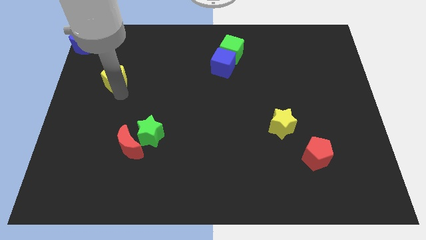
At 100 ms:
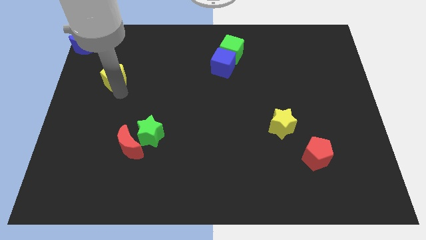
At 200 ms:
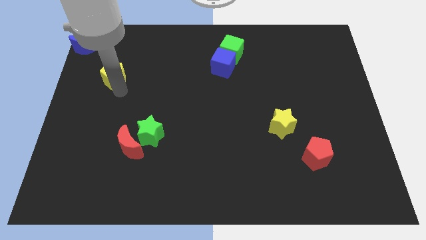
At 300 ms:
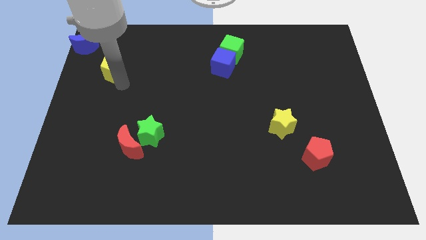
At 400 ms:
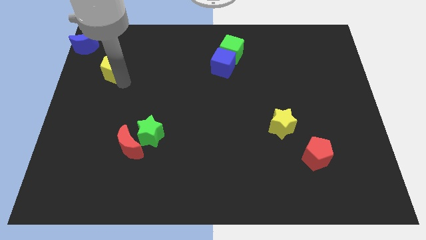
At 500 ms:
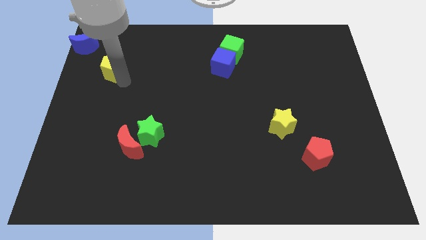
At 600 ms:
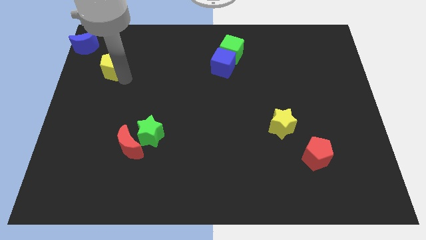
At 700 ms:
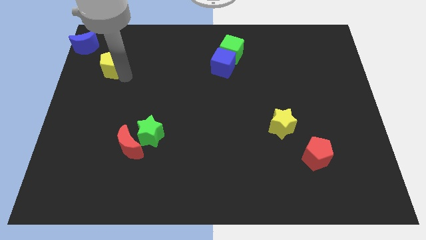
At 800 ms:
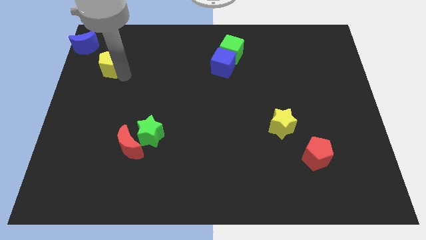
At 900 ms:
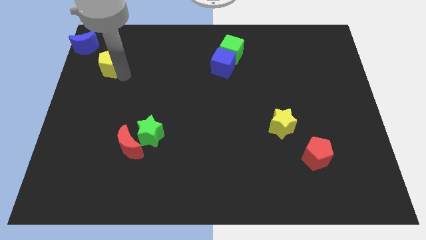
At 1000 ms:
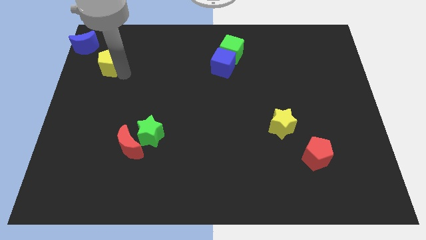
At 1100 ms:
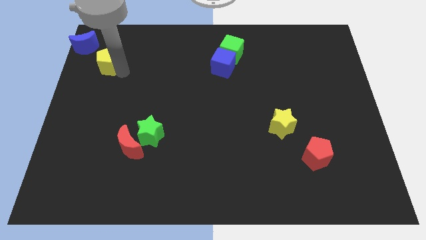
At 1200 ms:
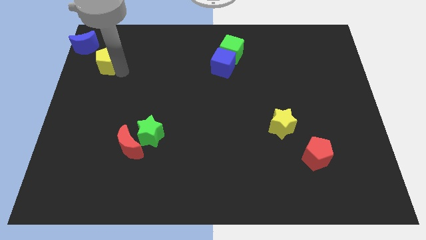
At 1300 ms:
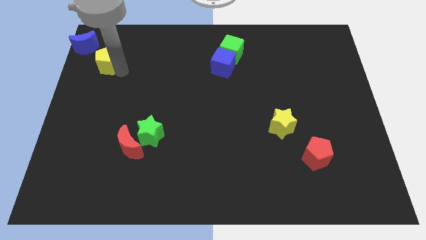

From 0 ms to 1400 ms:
take the yellow pentagon towards the blue crescent

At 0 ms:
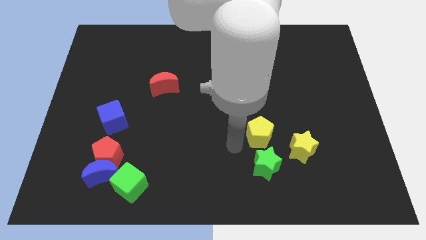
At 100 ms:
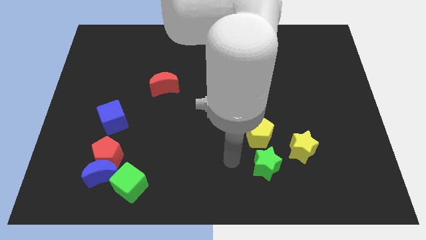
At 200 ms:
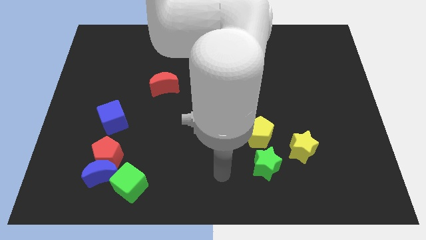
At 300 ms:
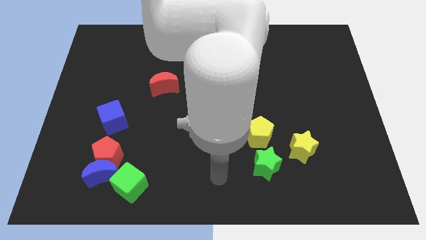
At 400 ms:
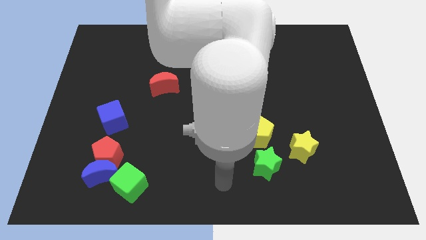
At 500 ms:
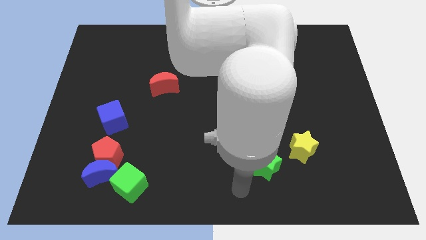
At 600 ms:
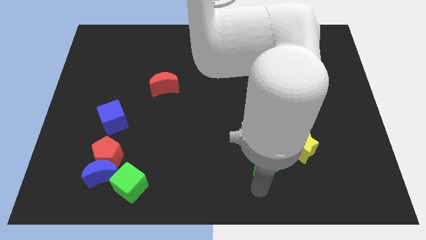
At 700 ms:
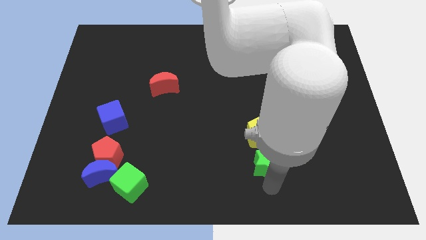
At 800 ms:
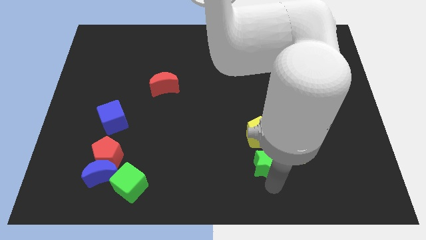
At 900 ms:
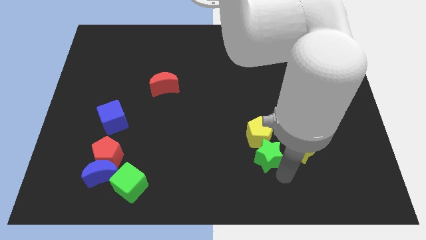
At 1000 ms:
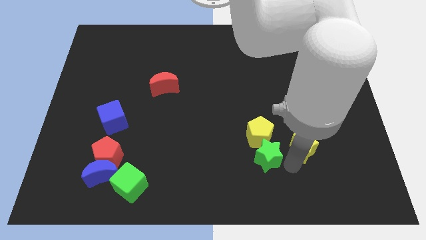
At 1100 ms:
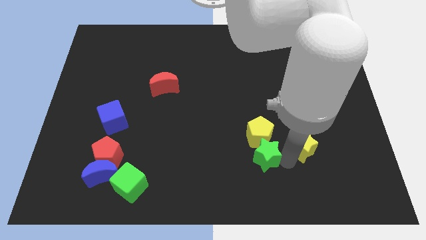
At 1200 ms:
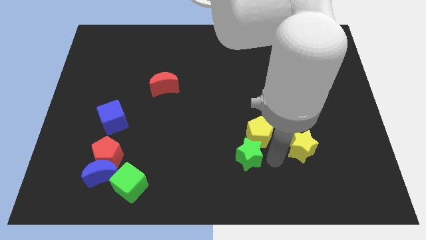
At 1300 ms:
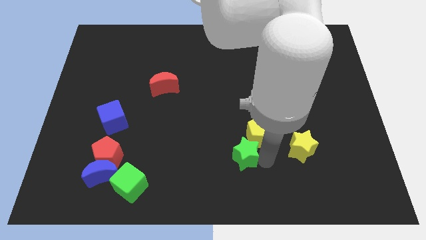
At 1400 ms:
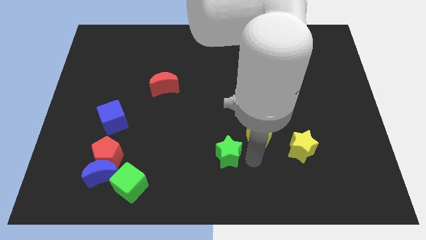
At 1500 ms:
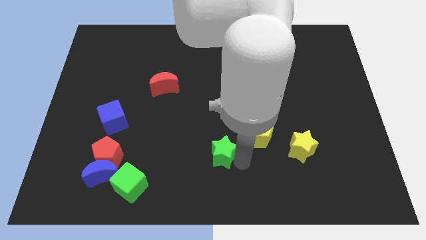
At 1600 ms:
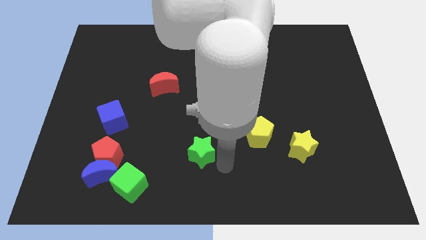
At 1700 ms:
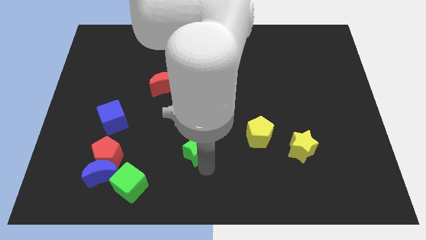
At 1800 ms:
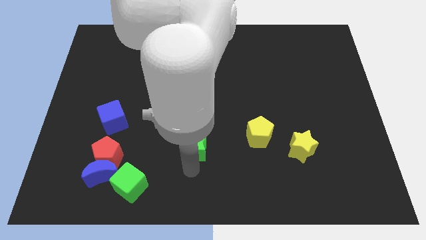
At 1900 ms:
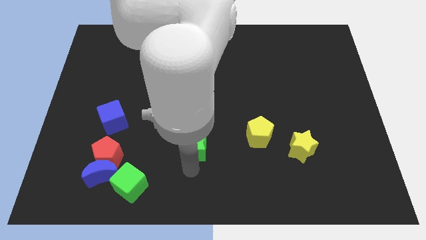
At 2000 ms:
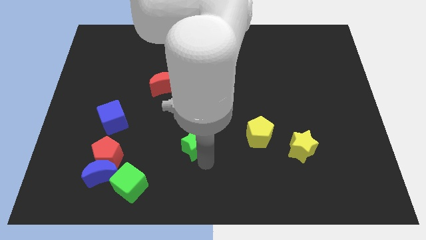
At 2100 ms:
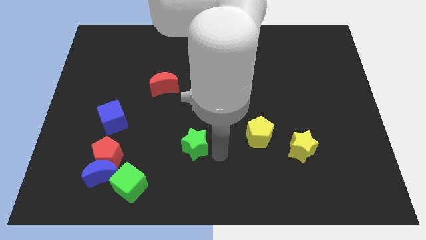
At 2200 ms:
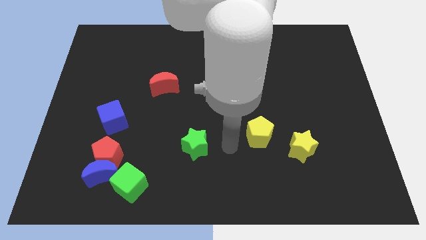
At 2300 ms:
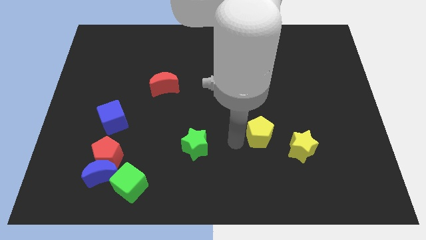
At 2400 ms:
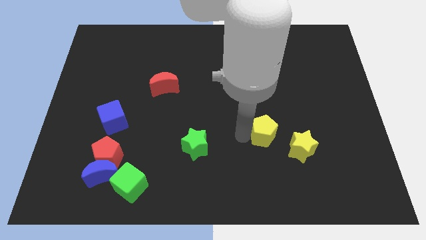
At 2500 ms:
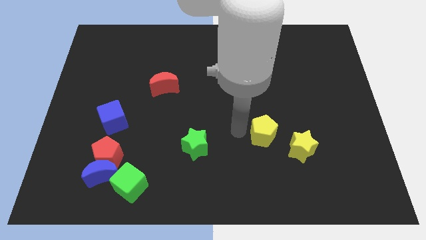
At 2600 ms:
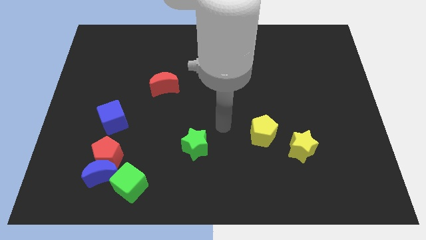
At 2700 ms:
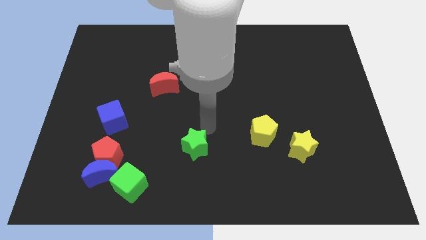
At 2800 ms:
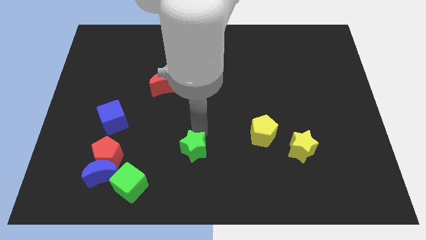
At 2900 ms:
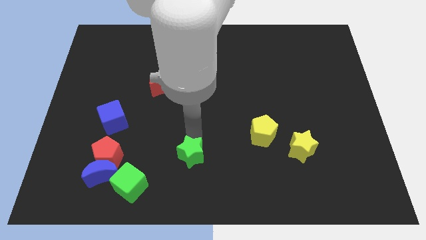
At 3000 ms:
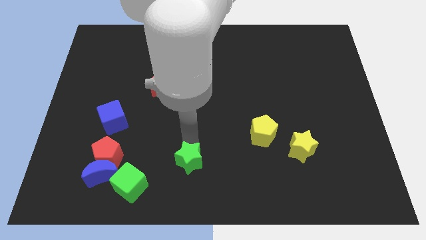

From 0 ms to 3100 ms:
push the green star to the right of the red pentagon

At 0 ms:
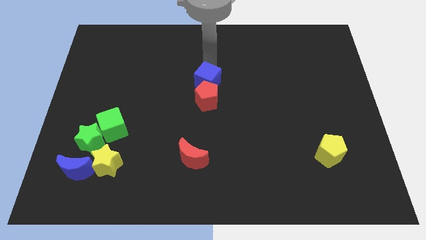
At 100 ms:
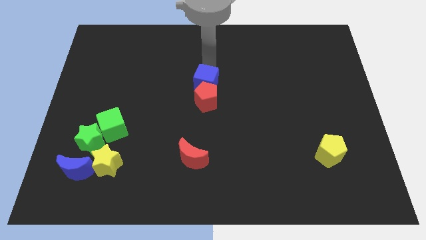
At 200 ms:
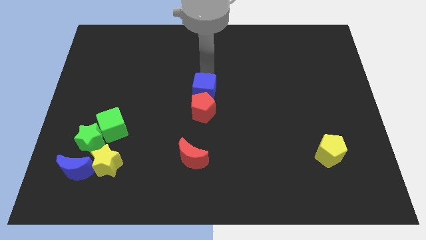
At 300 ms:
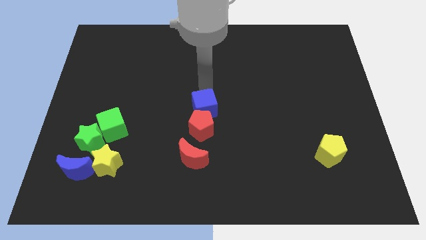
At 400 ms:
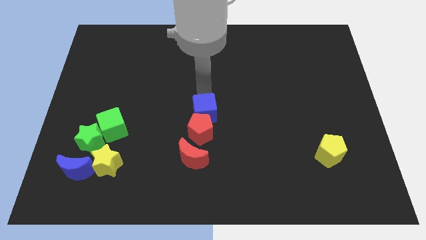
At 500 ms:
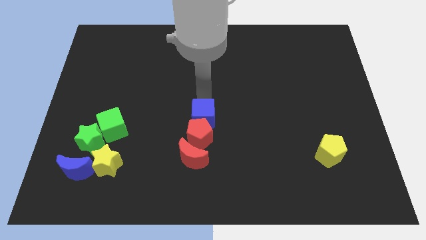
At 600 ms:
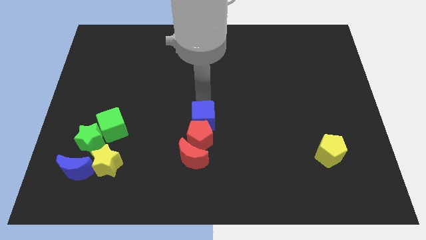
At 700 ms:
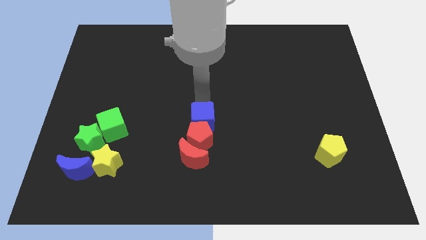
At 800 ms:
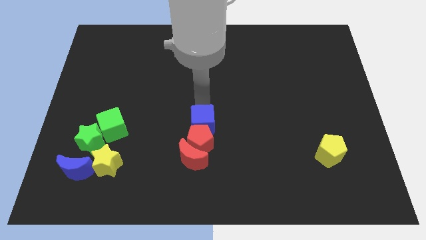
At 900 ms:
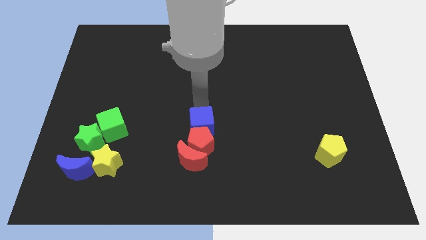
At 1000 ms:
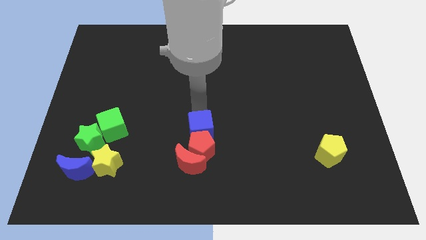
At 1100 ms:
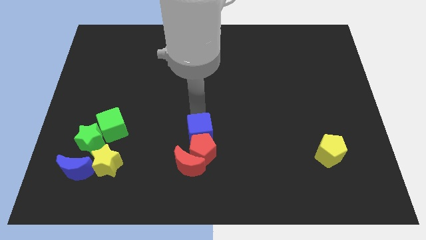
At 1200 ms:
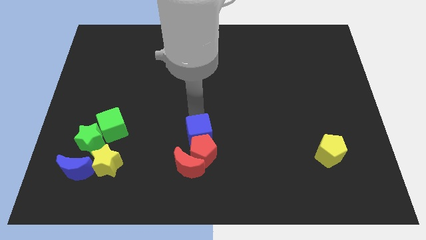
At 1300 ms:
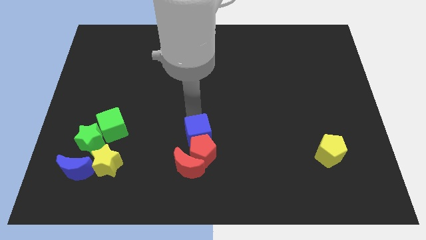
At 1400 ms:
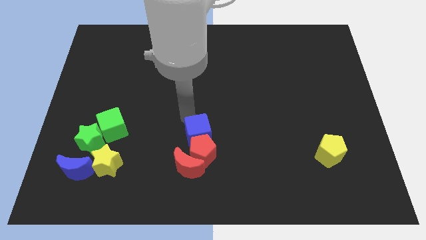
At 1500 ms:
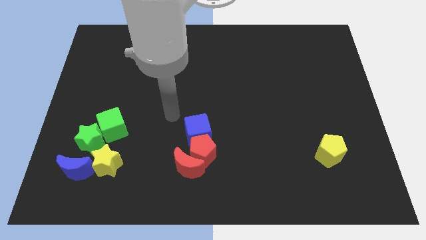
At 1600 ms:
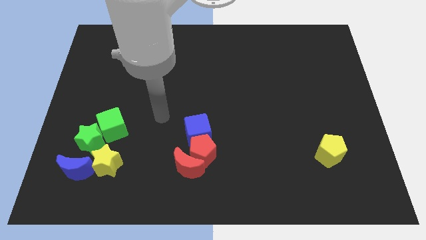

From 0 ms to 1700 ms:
move the blue cube red pentagon into the red crescent

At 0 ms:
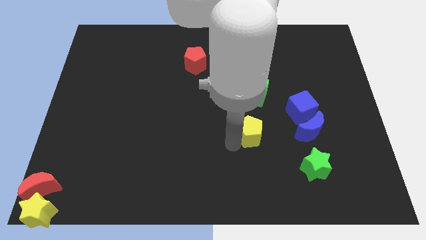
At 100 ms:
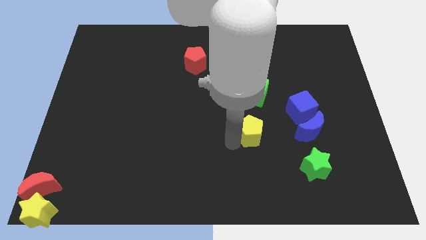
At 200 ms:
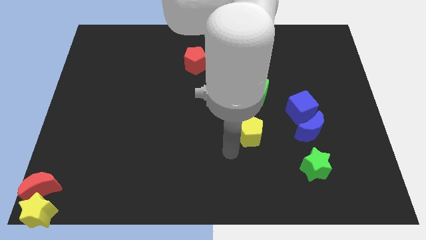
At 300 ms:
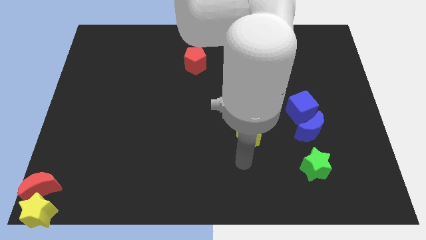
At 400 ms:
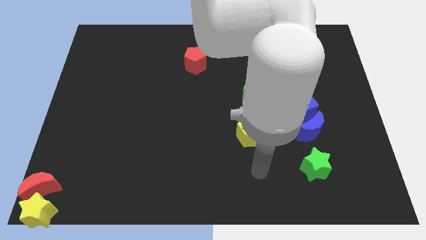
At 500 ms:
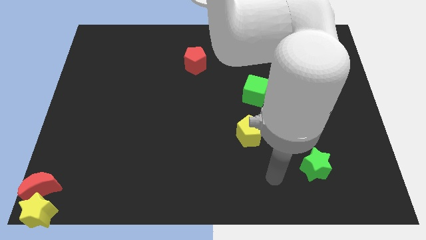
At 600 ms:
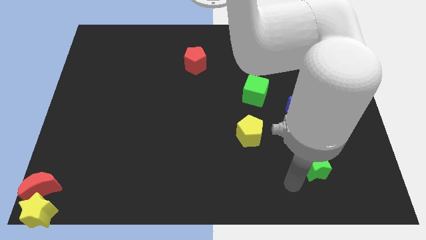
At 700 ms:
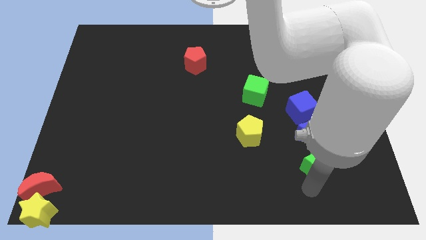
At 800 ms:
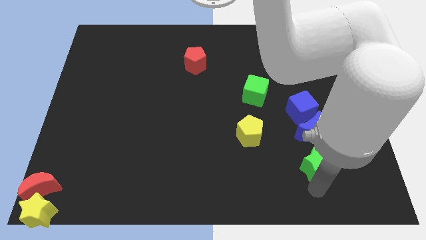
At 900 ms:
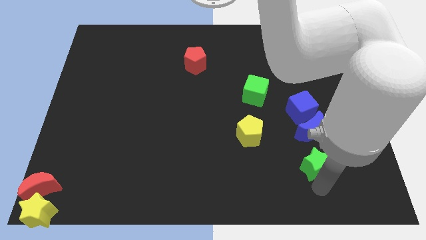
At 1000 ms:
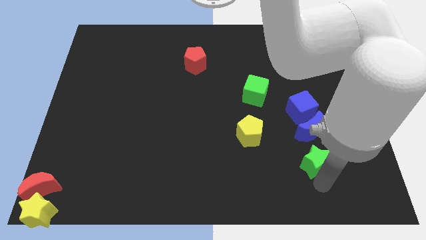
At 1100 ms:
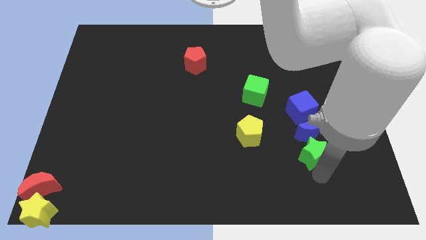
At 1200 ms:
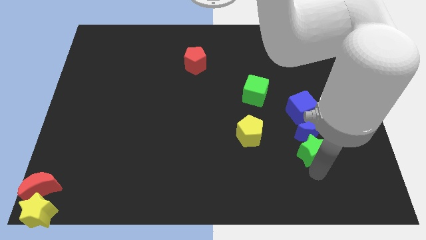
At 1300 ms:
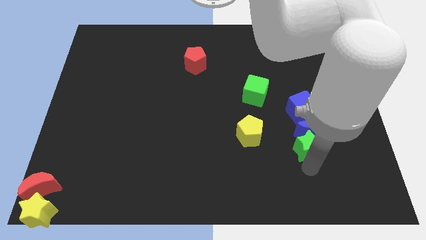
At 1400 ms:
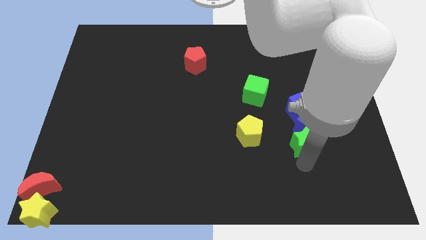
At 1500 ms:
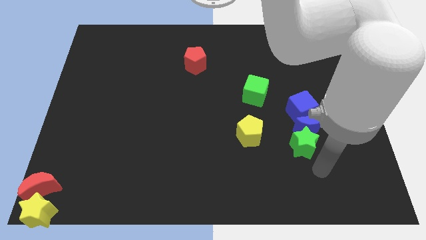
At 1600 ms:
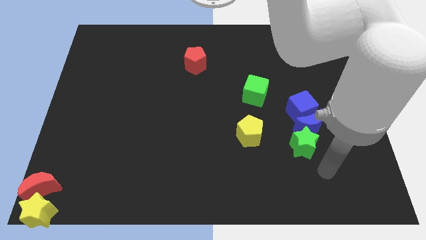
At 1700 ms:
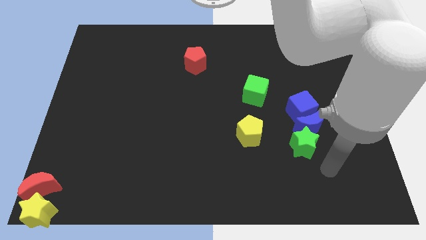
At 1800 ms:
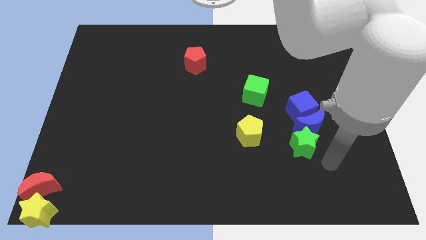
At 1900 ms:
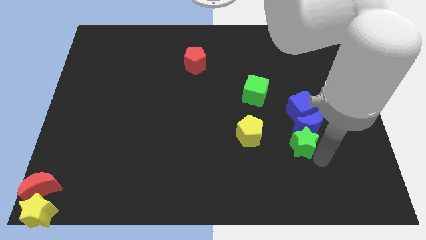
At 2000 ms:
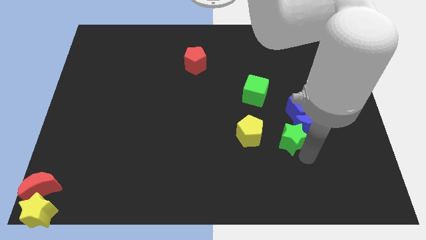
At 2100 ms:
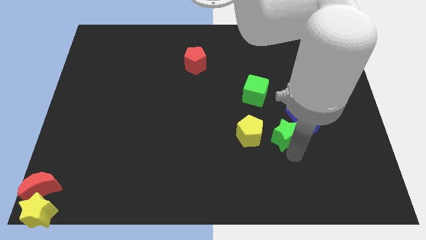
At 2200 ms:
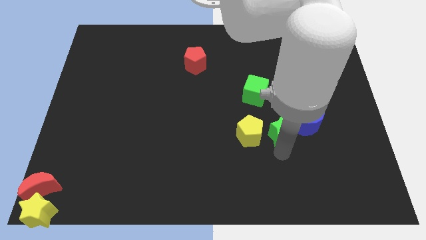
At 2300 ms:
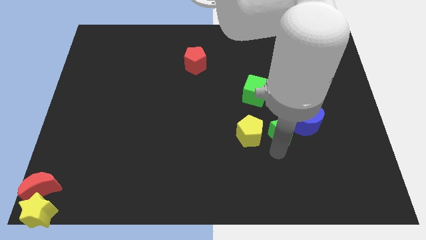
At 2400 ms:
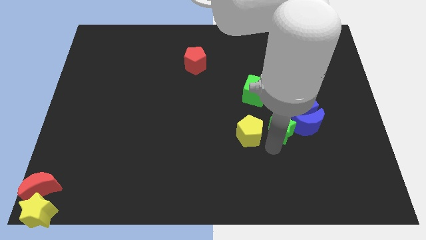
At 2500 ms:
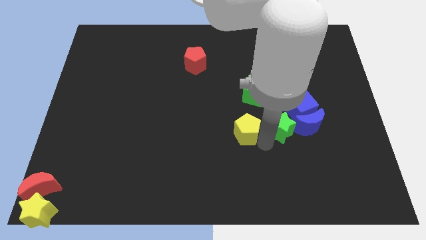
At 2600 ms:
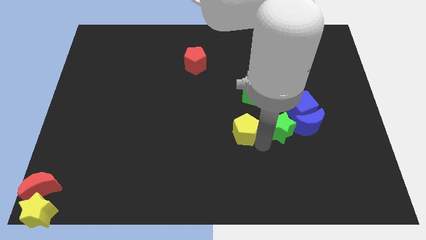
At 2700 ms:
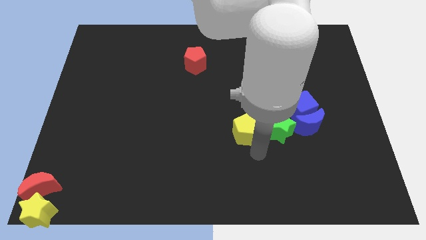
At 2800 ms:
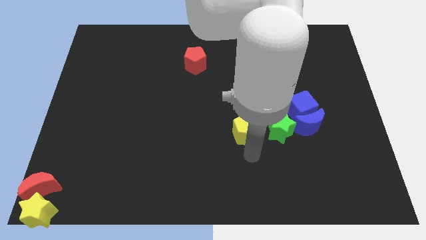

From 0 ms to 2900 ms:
move yellow pentagon and green star upwards
